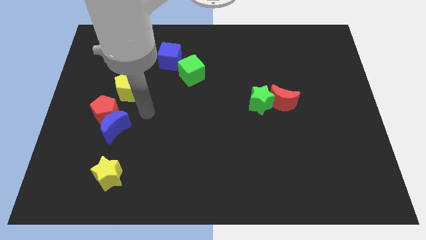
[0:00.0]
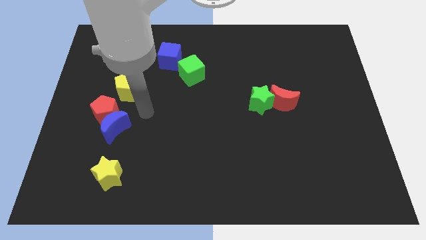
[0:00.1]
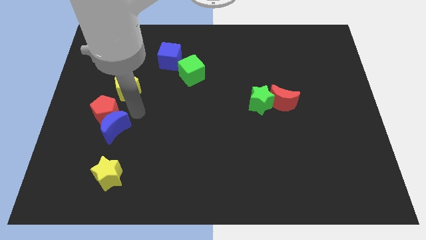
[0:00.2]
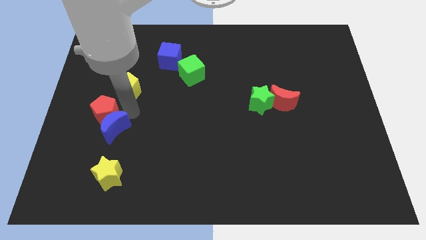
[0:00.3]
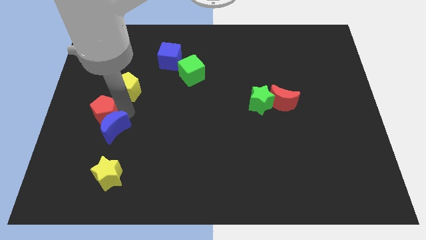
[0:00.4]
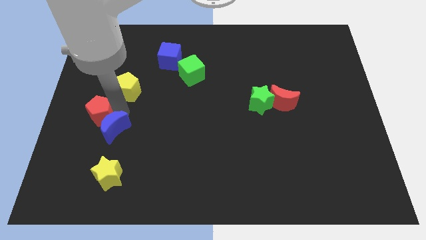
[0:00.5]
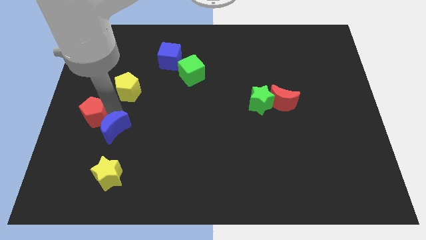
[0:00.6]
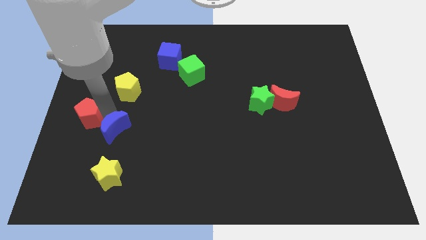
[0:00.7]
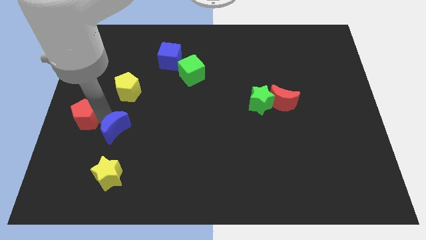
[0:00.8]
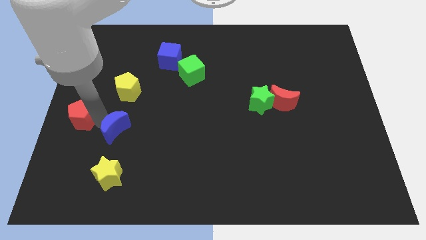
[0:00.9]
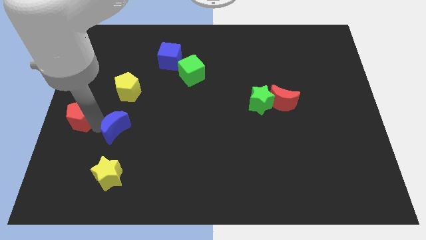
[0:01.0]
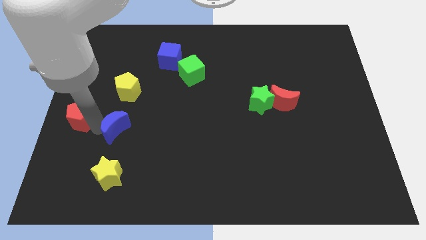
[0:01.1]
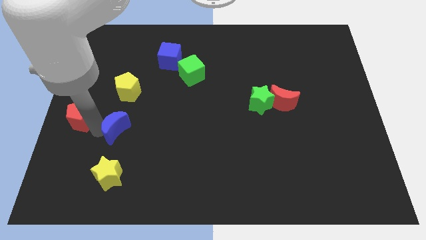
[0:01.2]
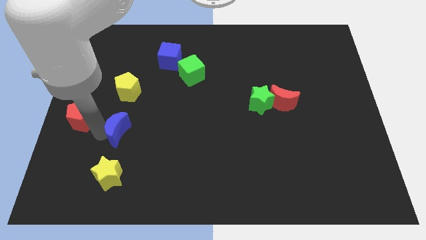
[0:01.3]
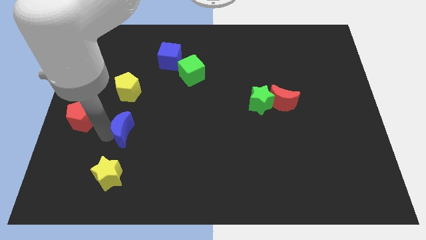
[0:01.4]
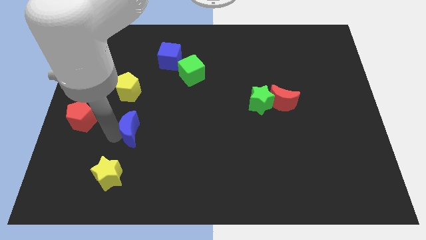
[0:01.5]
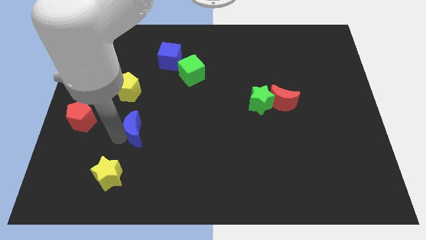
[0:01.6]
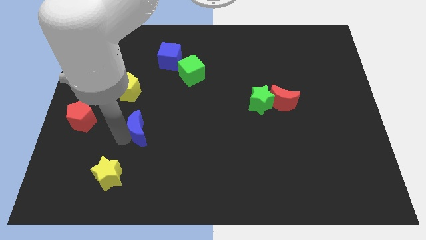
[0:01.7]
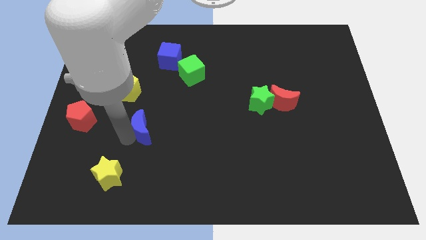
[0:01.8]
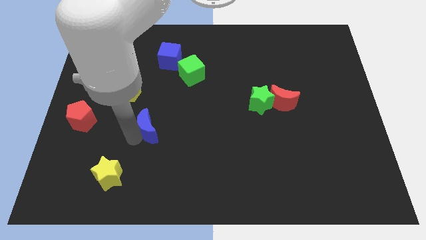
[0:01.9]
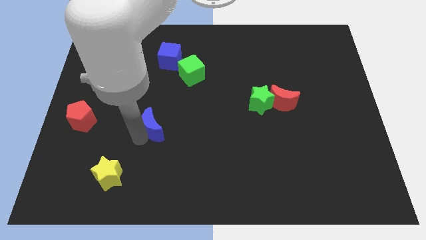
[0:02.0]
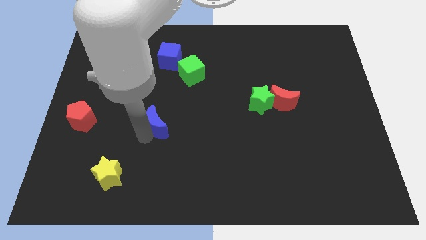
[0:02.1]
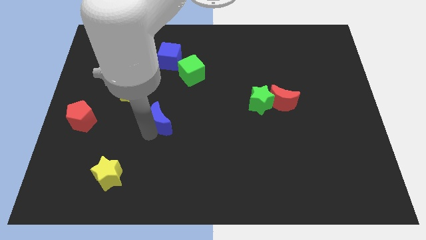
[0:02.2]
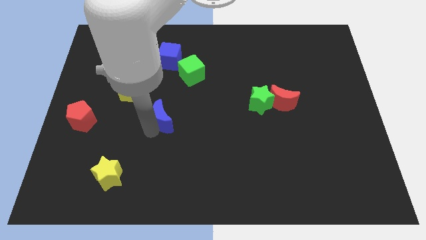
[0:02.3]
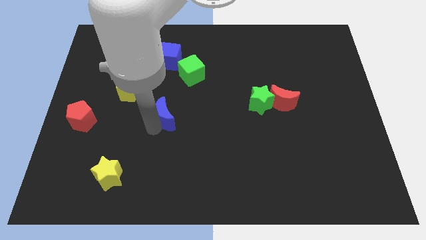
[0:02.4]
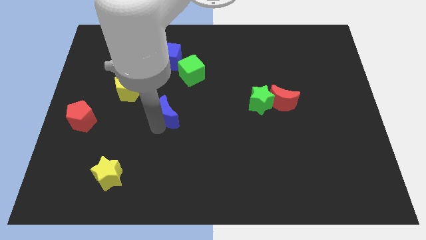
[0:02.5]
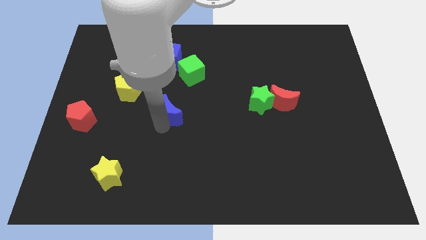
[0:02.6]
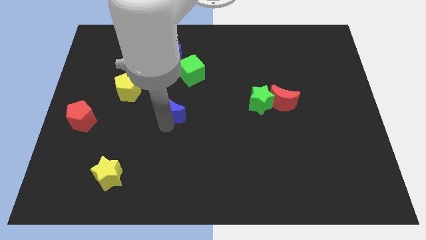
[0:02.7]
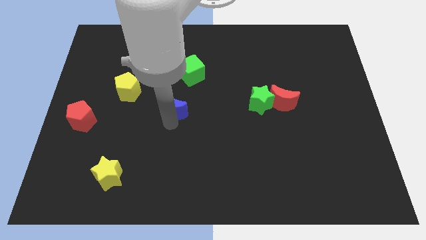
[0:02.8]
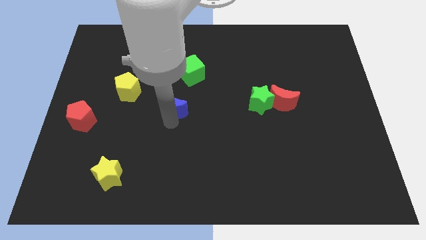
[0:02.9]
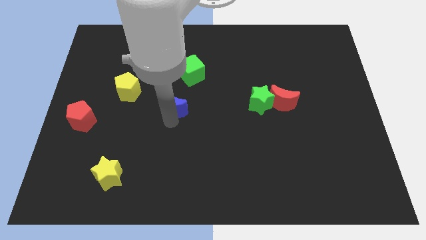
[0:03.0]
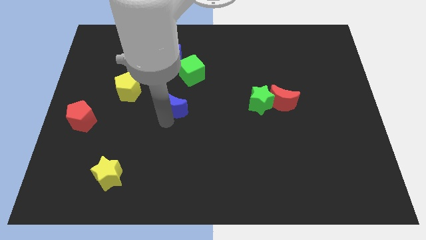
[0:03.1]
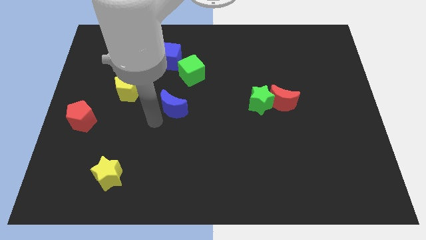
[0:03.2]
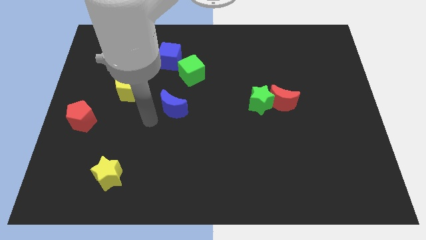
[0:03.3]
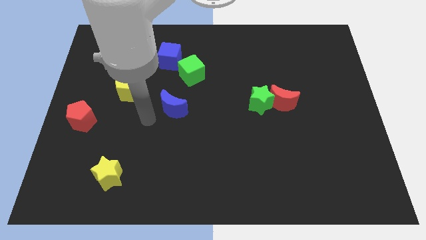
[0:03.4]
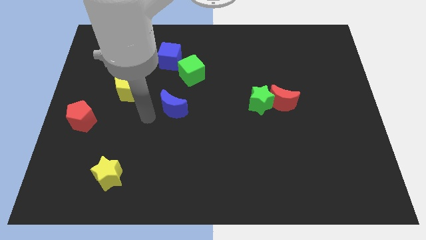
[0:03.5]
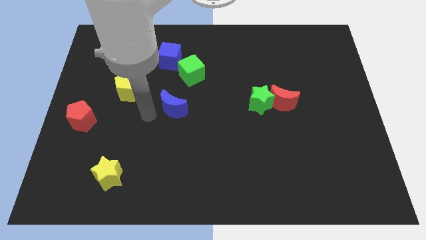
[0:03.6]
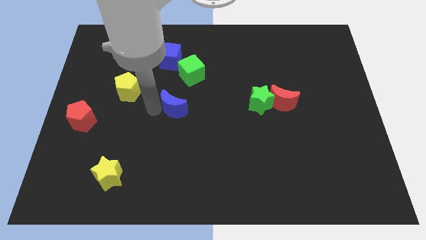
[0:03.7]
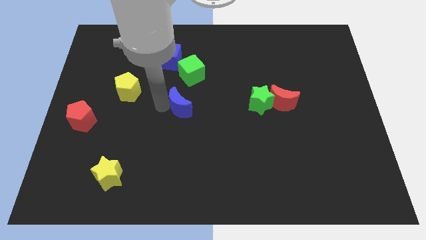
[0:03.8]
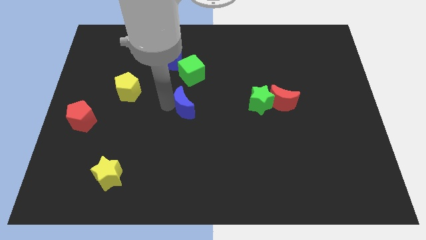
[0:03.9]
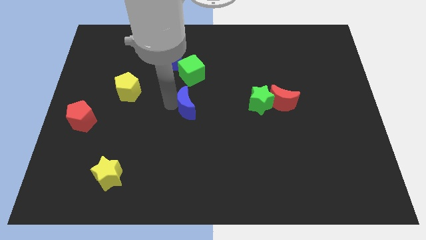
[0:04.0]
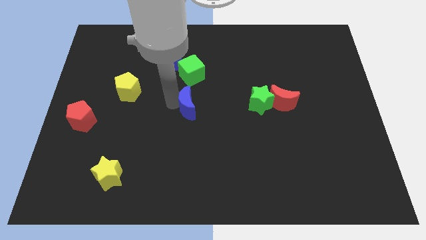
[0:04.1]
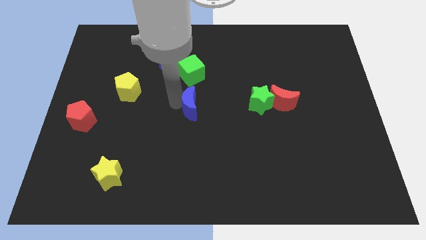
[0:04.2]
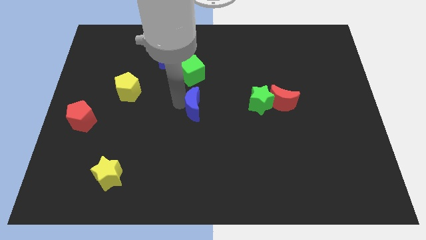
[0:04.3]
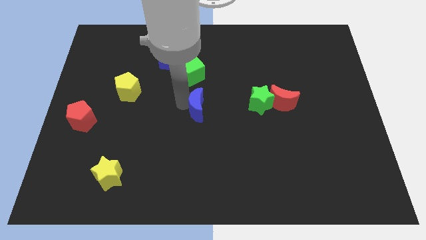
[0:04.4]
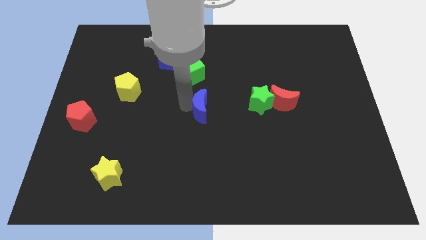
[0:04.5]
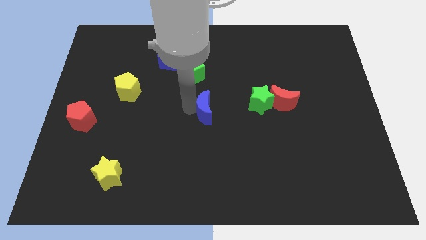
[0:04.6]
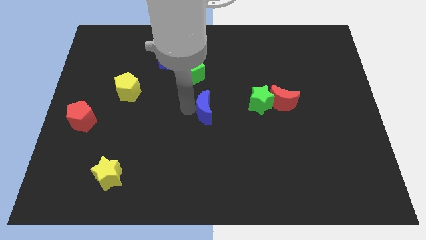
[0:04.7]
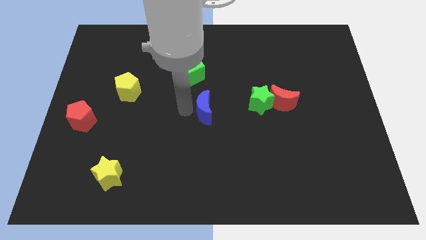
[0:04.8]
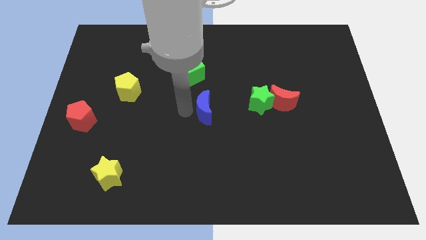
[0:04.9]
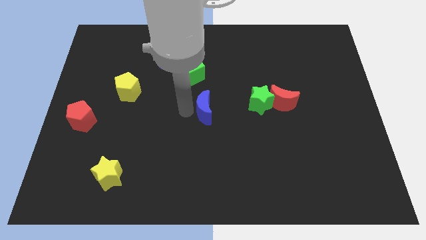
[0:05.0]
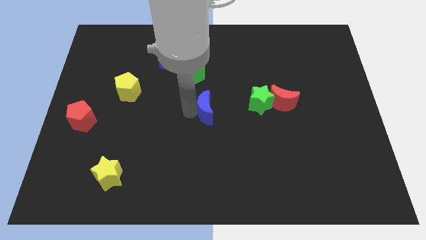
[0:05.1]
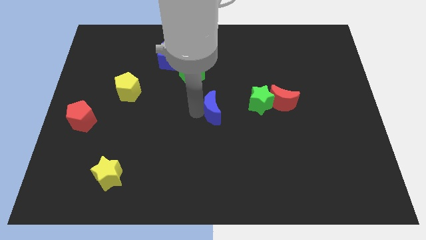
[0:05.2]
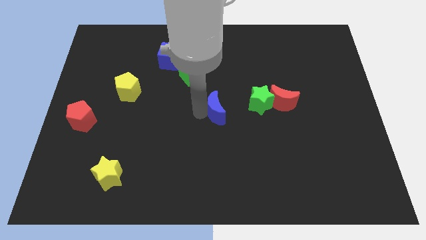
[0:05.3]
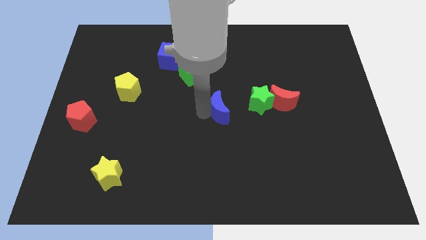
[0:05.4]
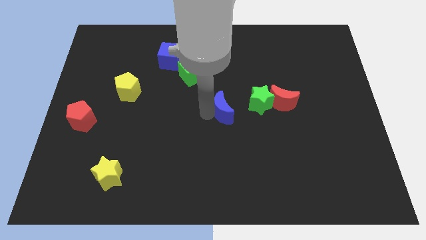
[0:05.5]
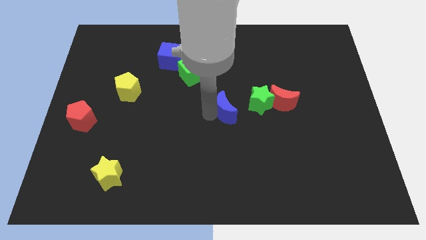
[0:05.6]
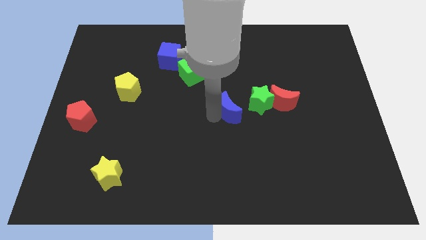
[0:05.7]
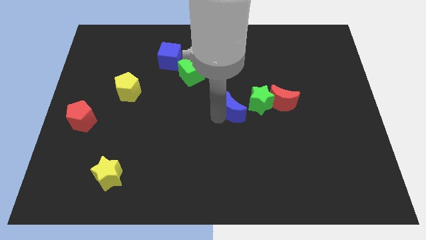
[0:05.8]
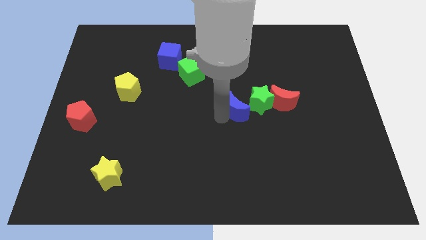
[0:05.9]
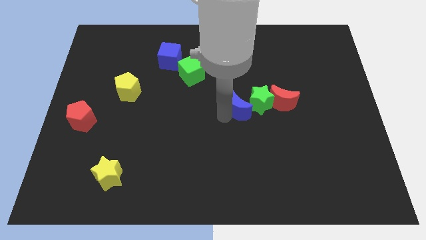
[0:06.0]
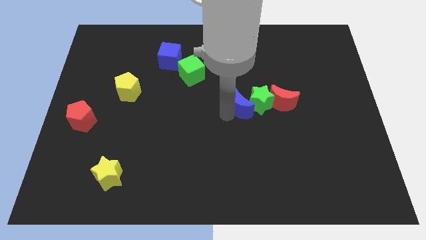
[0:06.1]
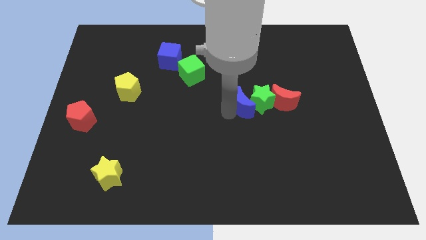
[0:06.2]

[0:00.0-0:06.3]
push the blue moon towards the green star

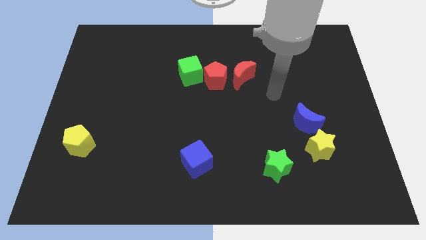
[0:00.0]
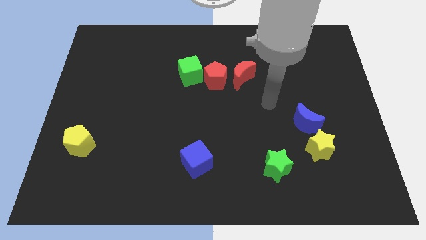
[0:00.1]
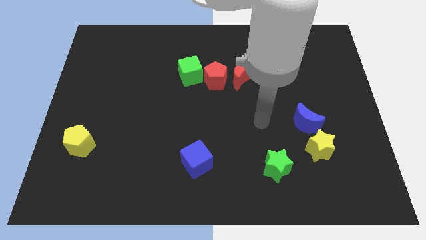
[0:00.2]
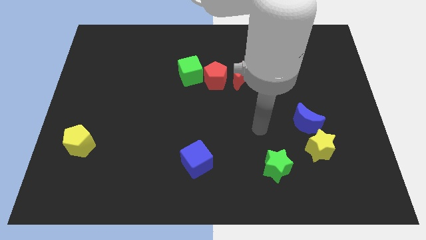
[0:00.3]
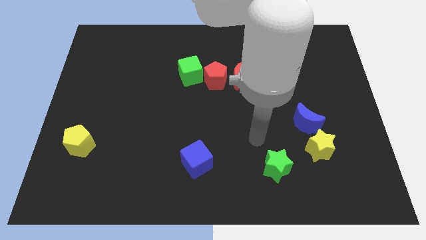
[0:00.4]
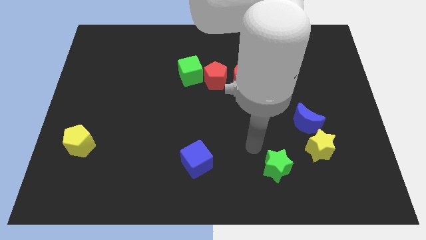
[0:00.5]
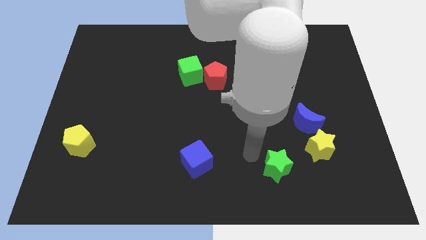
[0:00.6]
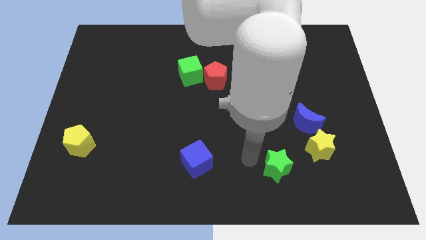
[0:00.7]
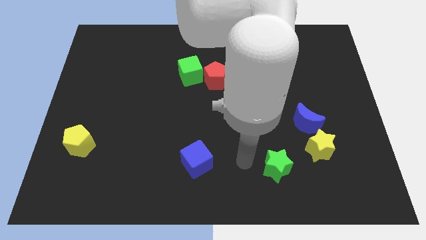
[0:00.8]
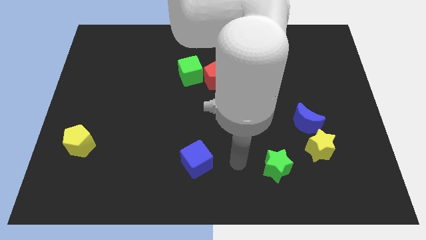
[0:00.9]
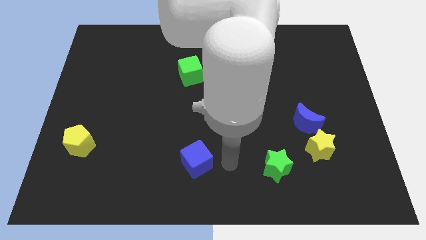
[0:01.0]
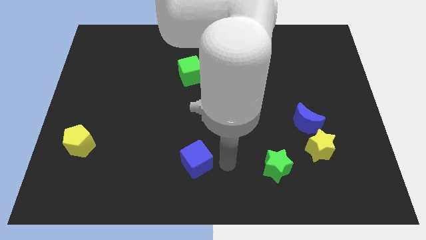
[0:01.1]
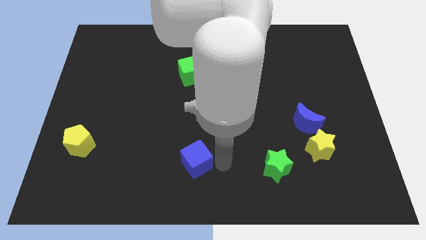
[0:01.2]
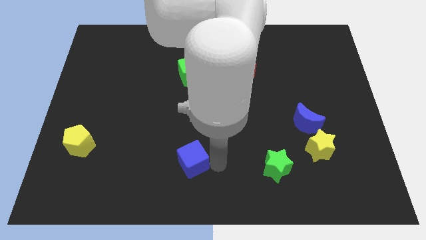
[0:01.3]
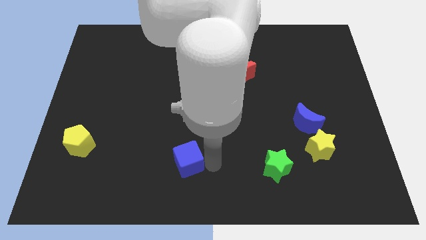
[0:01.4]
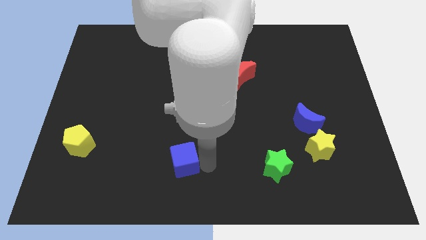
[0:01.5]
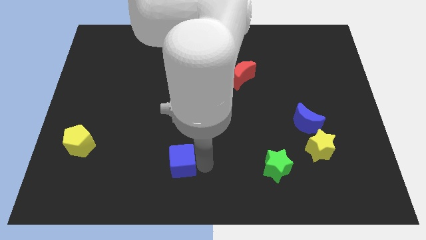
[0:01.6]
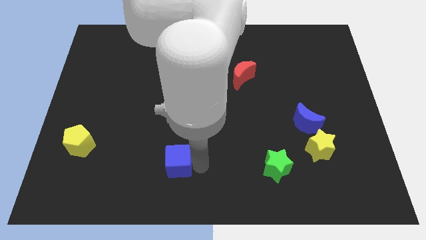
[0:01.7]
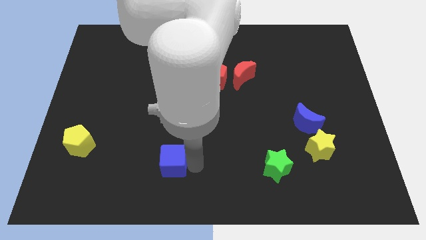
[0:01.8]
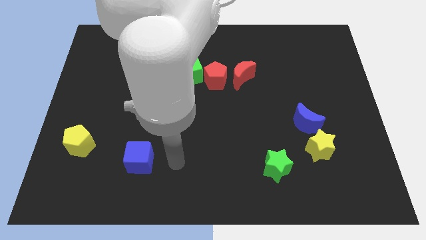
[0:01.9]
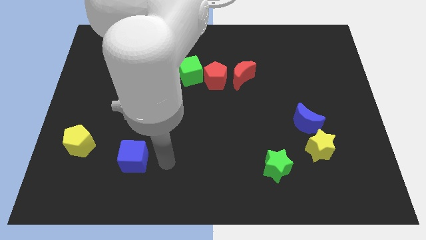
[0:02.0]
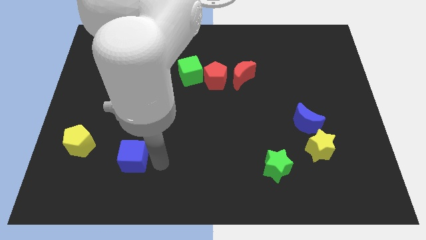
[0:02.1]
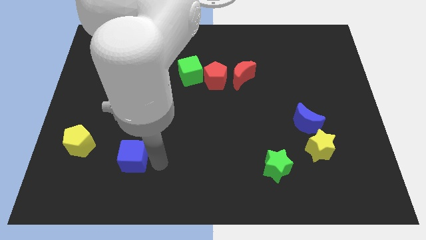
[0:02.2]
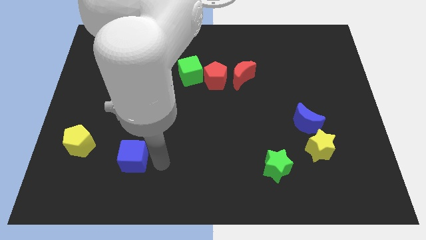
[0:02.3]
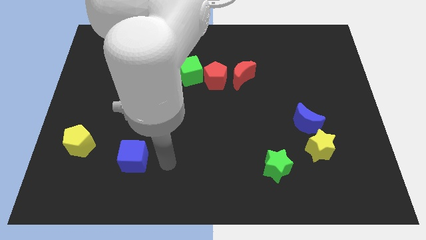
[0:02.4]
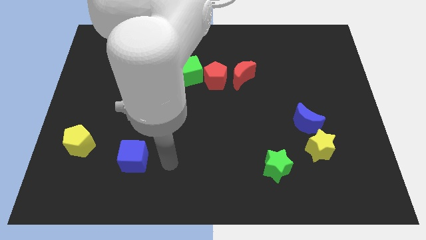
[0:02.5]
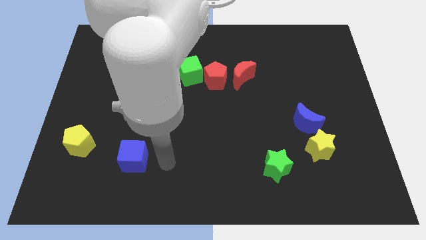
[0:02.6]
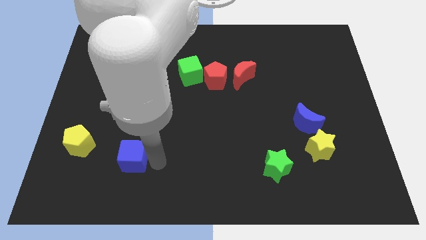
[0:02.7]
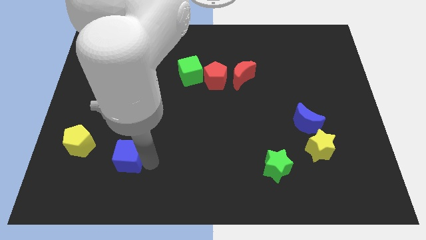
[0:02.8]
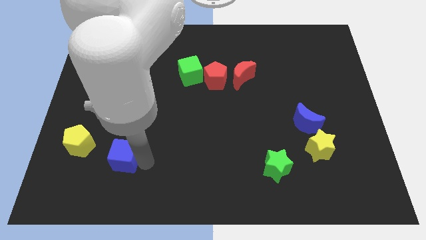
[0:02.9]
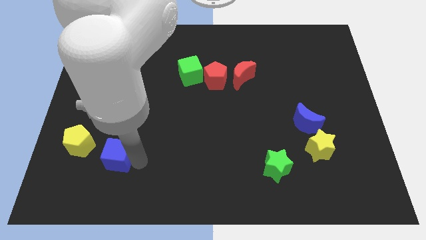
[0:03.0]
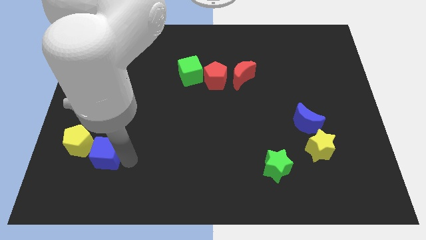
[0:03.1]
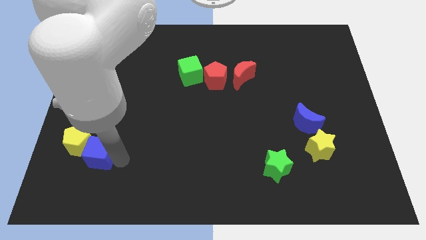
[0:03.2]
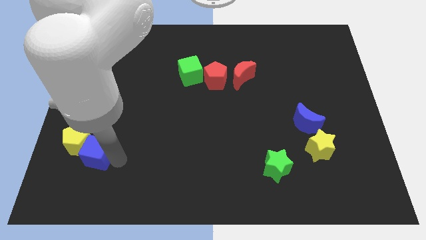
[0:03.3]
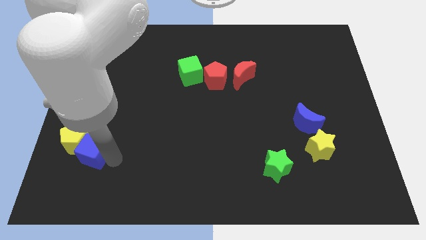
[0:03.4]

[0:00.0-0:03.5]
push the blue cube next to the yellow pentagon
